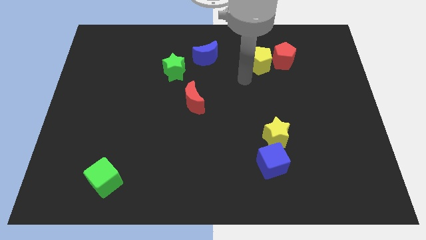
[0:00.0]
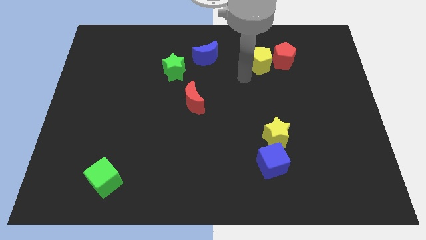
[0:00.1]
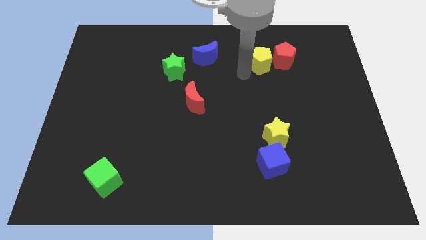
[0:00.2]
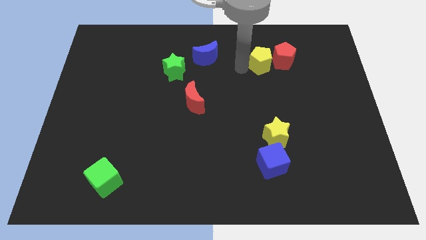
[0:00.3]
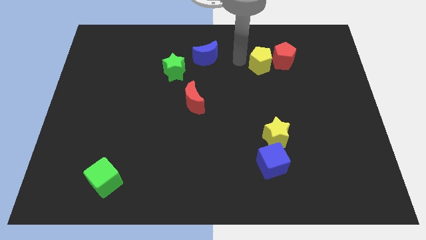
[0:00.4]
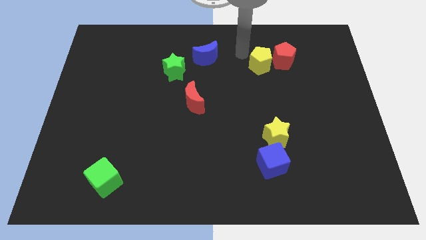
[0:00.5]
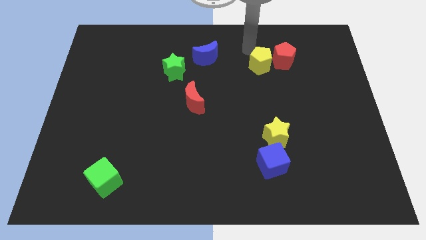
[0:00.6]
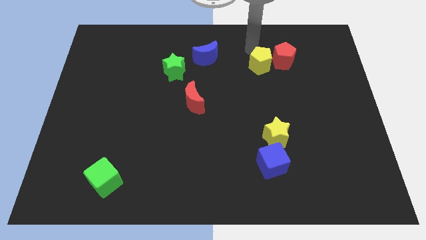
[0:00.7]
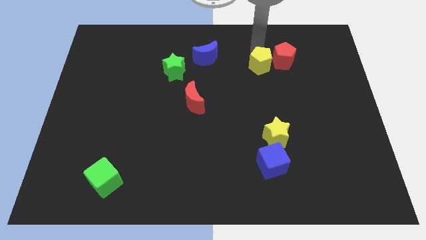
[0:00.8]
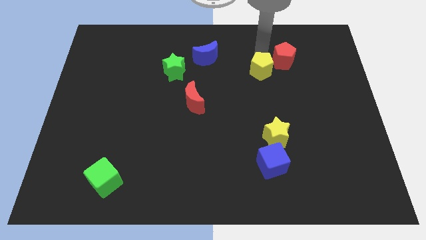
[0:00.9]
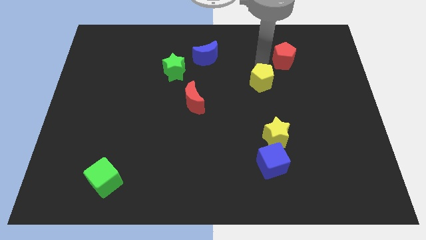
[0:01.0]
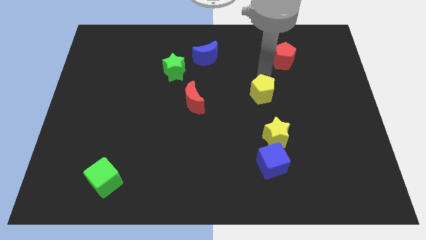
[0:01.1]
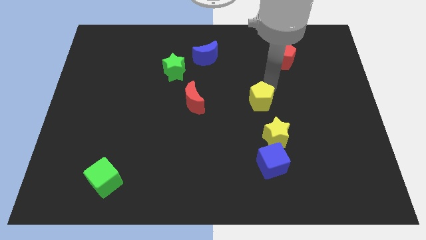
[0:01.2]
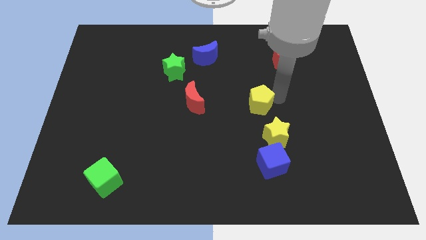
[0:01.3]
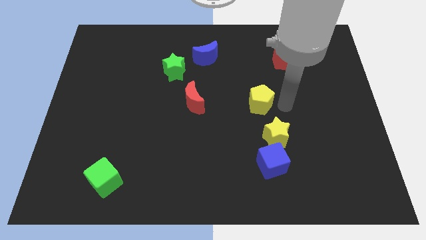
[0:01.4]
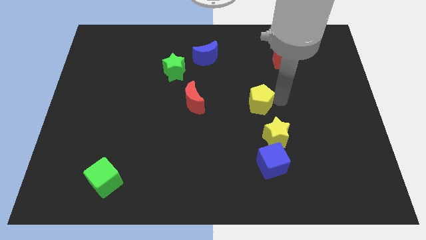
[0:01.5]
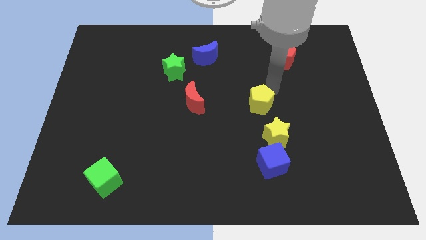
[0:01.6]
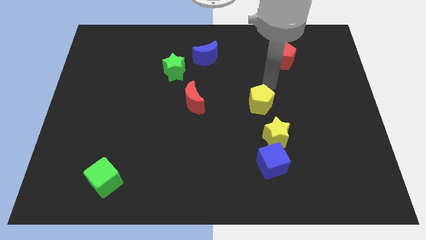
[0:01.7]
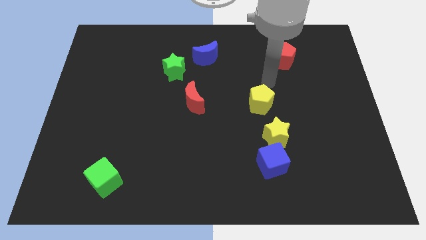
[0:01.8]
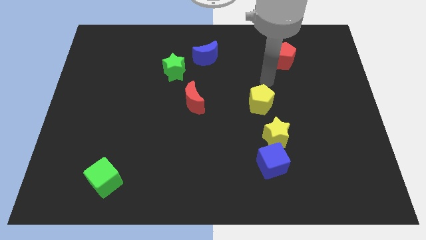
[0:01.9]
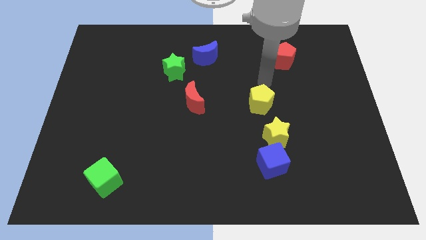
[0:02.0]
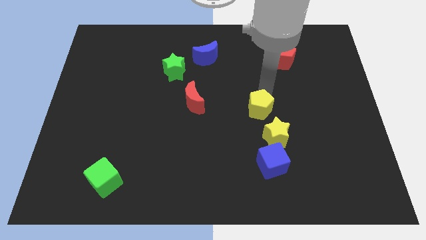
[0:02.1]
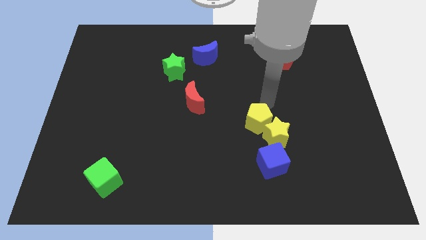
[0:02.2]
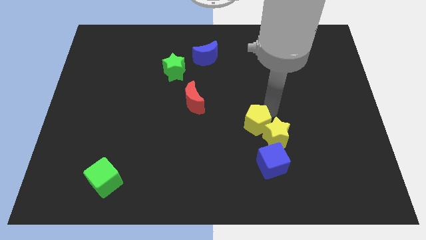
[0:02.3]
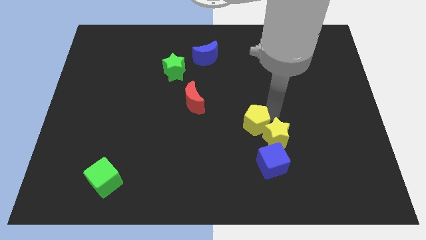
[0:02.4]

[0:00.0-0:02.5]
move the yellow pentagon left above the yellow star

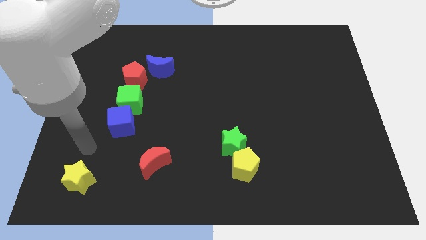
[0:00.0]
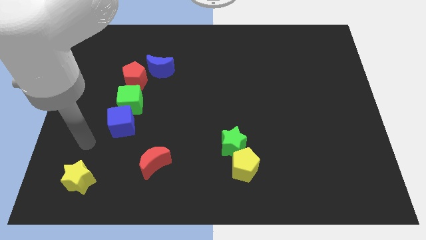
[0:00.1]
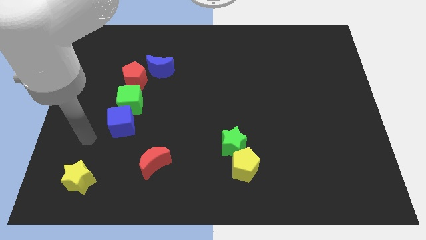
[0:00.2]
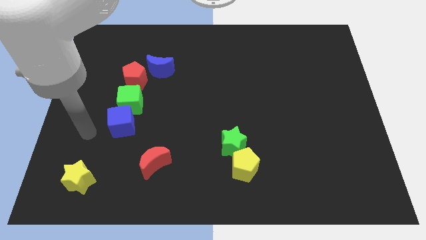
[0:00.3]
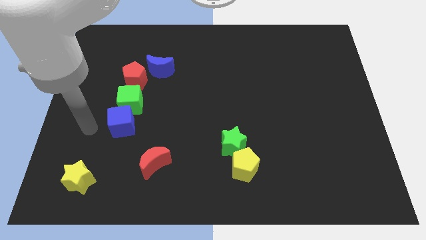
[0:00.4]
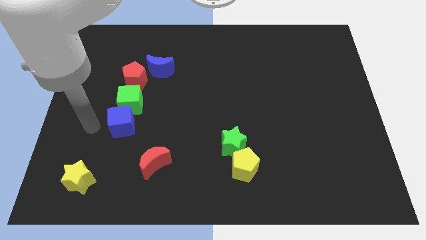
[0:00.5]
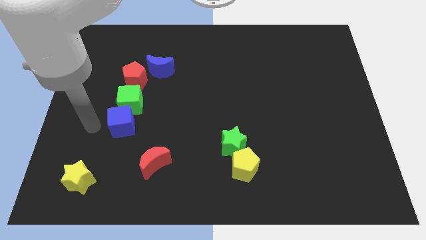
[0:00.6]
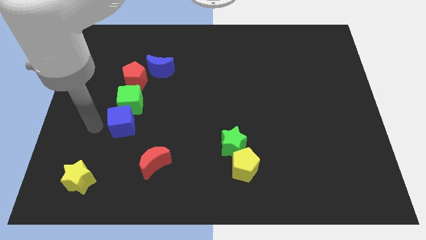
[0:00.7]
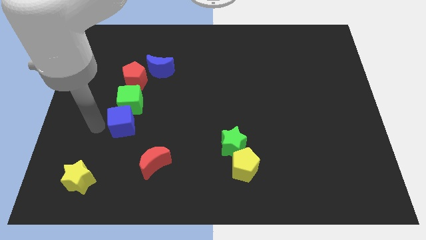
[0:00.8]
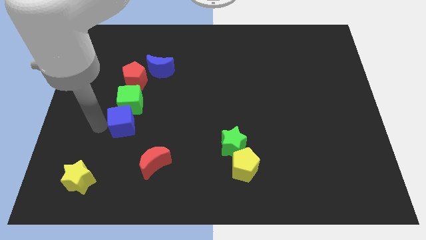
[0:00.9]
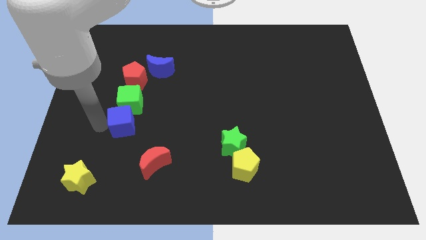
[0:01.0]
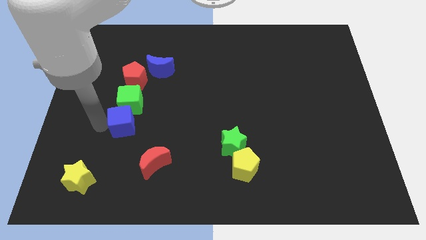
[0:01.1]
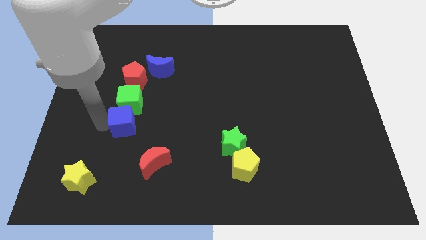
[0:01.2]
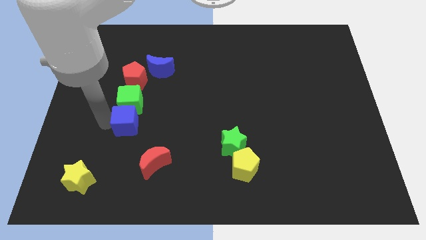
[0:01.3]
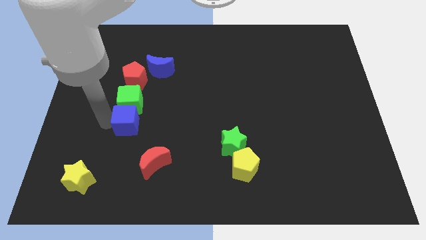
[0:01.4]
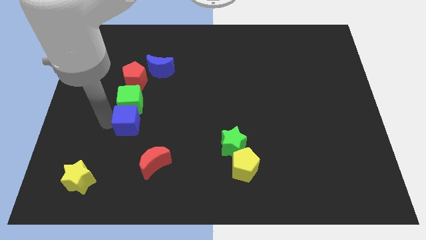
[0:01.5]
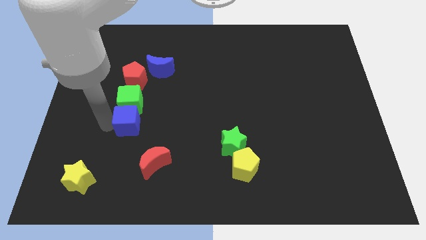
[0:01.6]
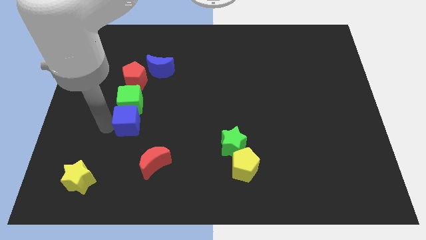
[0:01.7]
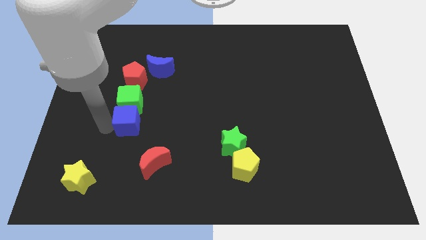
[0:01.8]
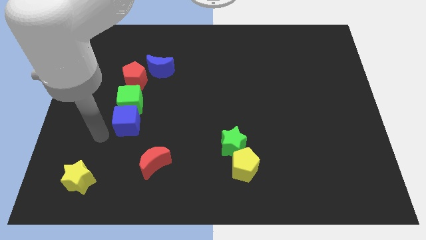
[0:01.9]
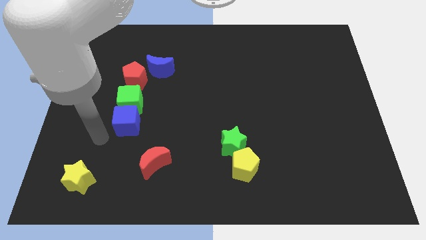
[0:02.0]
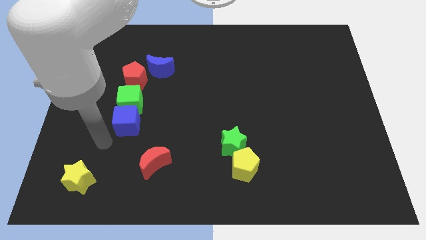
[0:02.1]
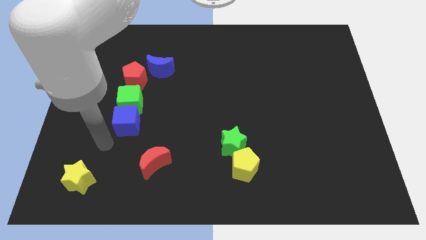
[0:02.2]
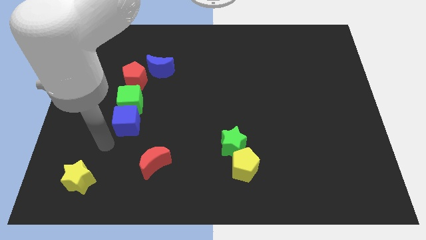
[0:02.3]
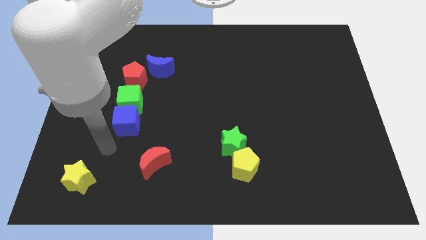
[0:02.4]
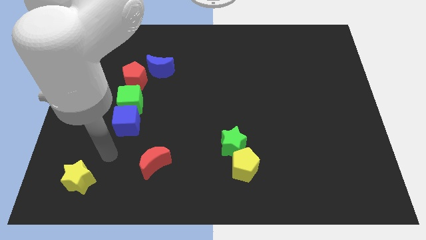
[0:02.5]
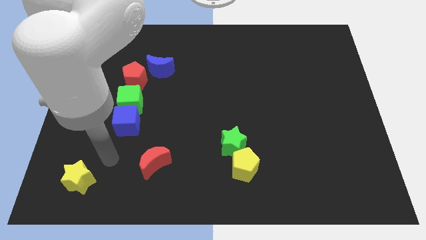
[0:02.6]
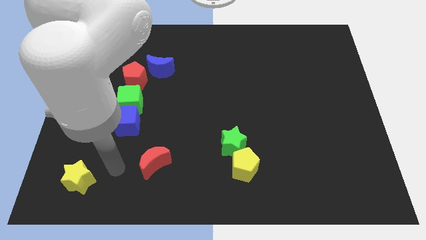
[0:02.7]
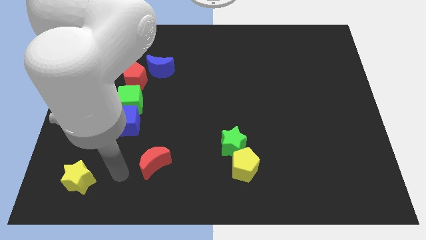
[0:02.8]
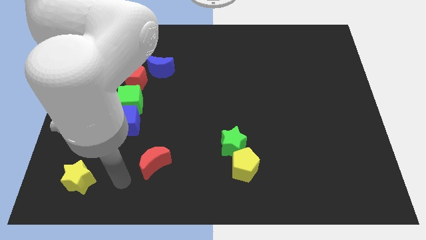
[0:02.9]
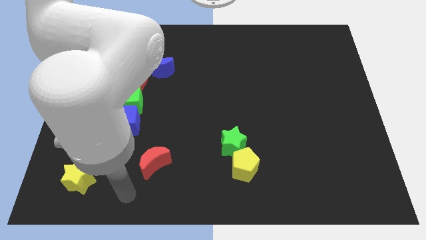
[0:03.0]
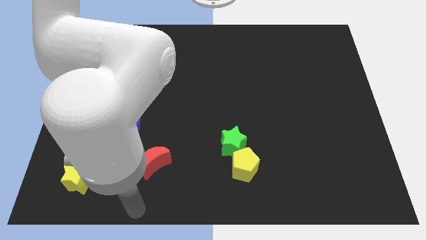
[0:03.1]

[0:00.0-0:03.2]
push the blue cube to the right slightly

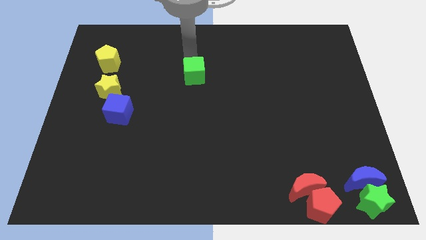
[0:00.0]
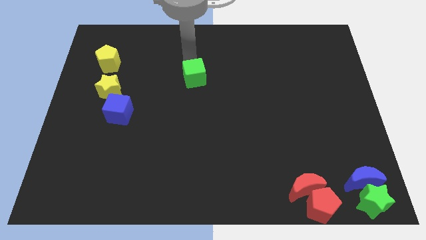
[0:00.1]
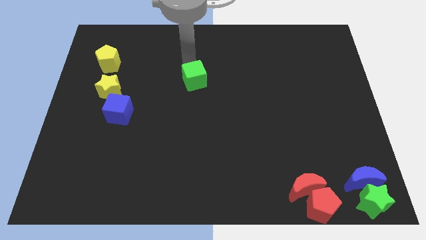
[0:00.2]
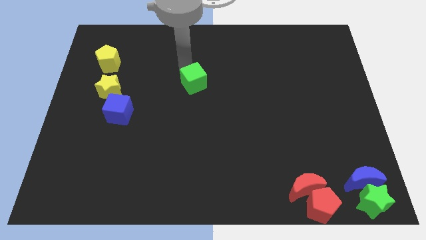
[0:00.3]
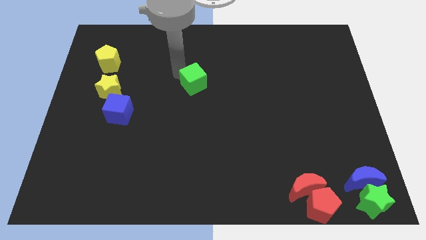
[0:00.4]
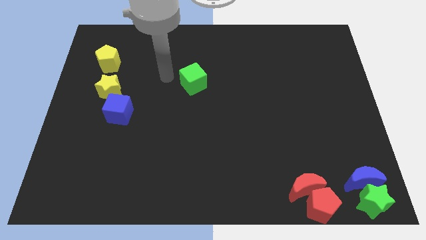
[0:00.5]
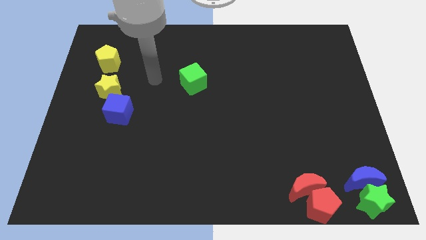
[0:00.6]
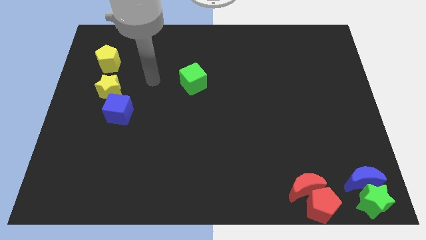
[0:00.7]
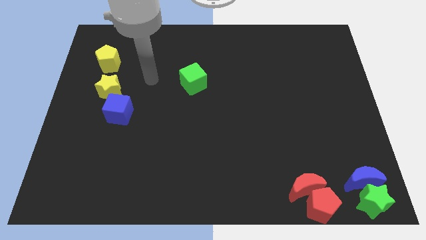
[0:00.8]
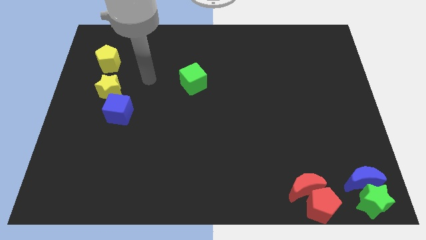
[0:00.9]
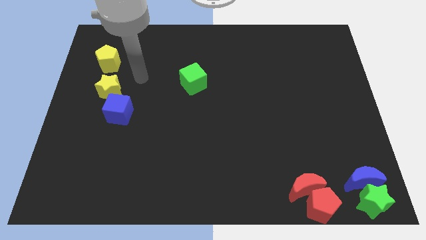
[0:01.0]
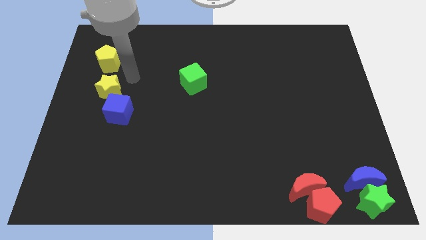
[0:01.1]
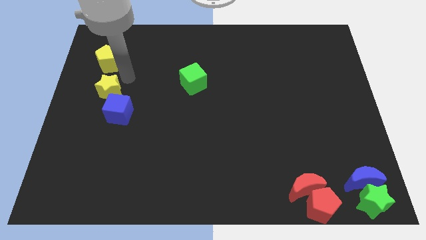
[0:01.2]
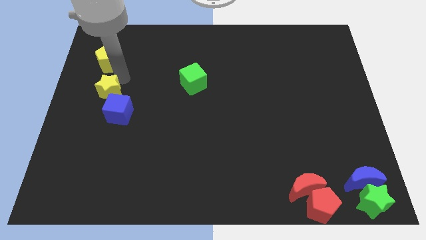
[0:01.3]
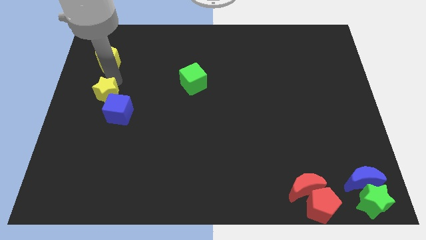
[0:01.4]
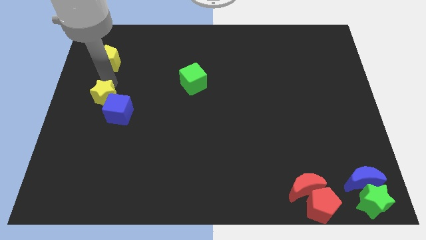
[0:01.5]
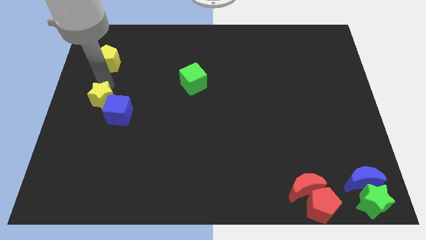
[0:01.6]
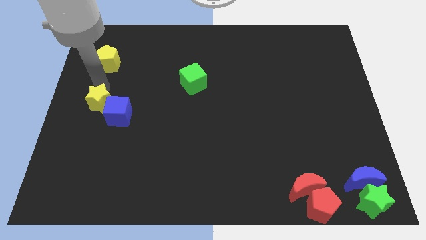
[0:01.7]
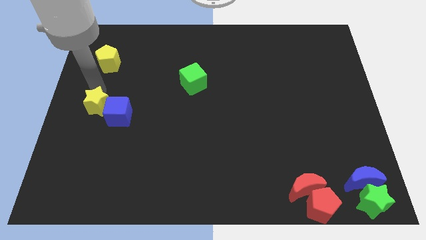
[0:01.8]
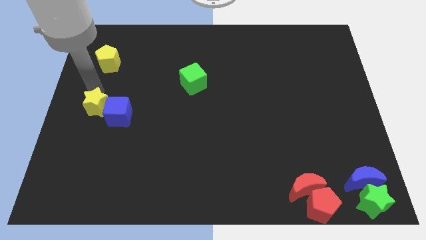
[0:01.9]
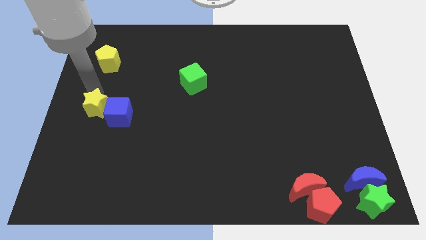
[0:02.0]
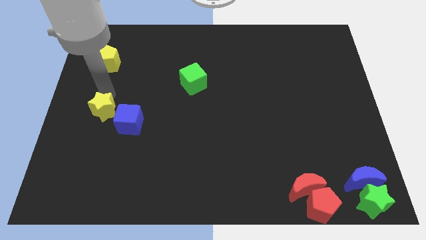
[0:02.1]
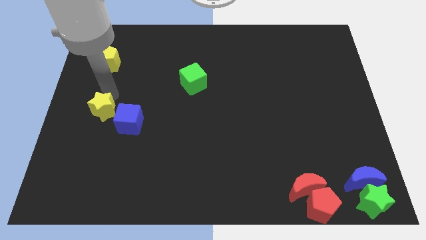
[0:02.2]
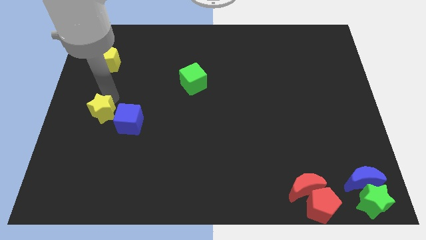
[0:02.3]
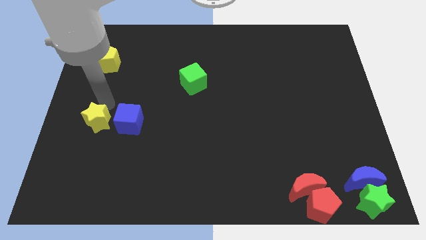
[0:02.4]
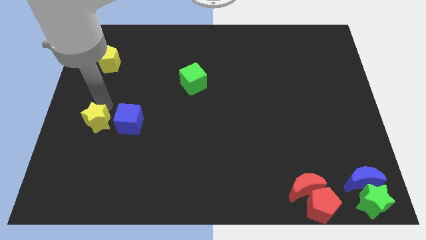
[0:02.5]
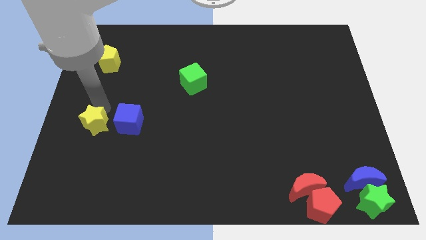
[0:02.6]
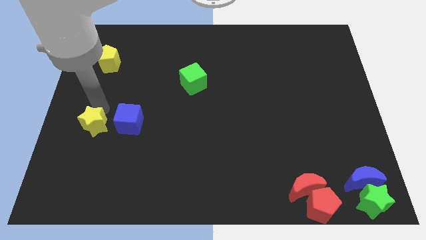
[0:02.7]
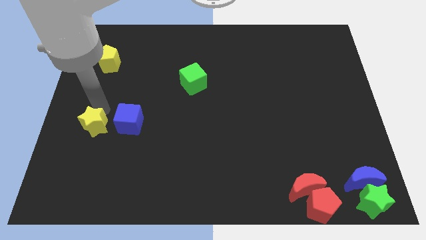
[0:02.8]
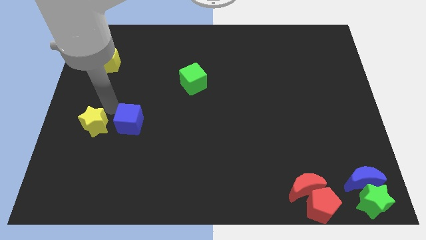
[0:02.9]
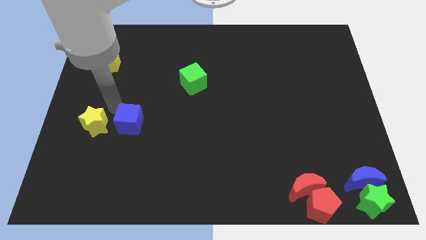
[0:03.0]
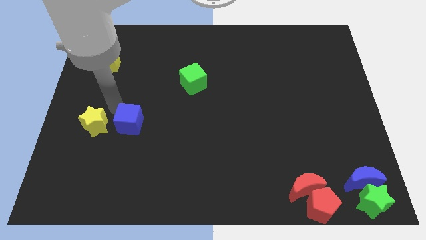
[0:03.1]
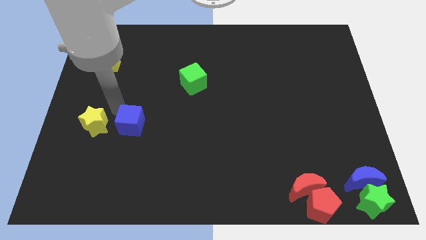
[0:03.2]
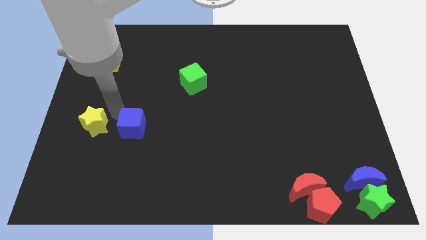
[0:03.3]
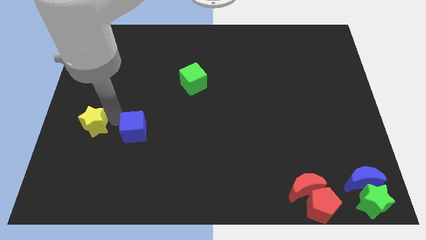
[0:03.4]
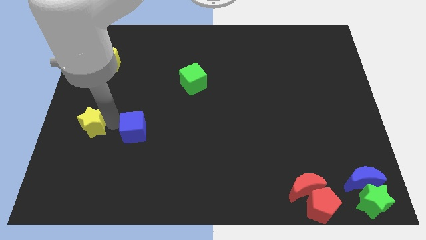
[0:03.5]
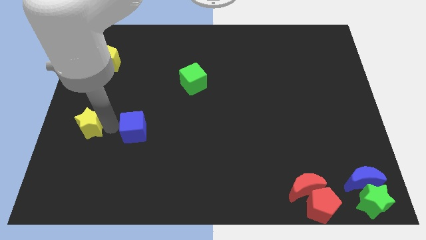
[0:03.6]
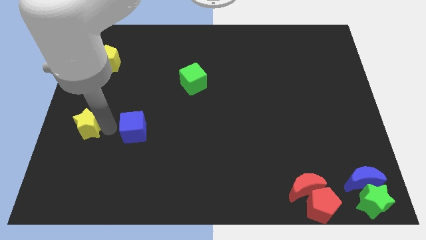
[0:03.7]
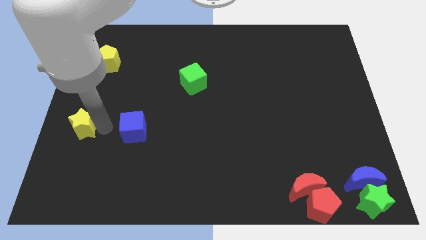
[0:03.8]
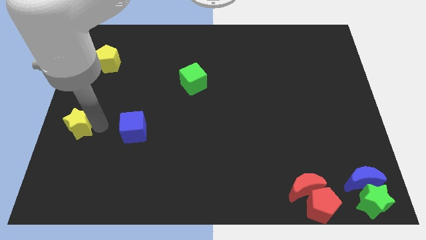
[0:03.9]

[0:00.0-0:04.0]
separate yellow star and blue cube
